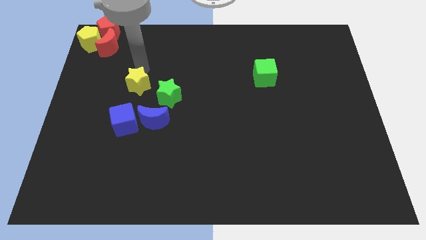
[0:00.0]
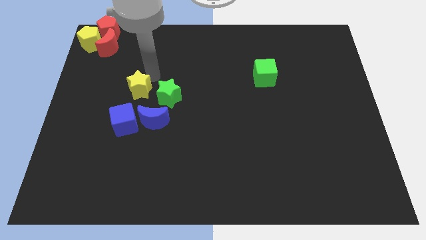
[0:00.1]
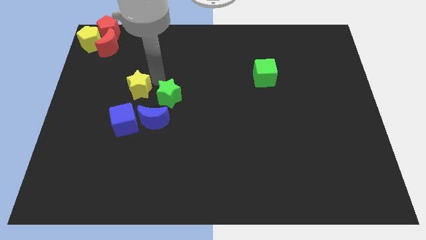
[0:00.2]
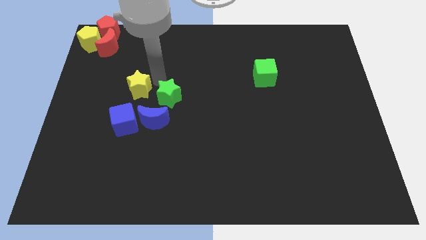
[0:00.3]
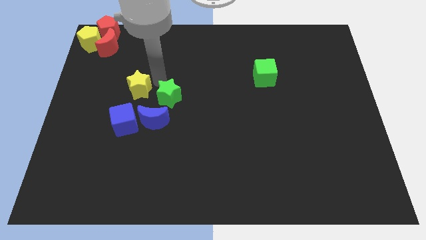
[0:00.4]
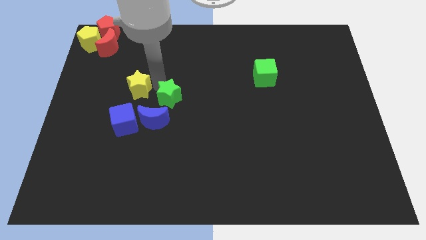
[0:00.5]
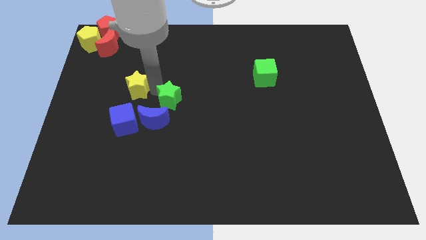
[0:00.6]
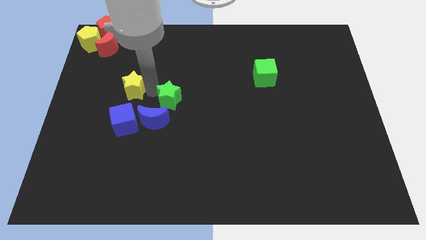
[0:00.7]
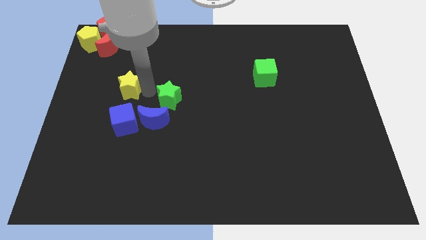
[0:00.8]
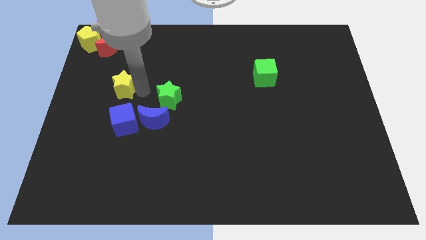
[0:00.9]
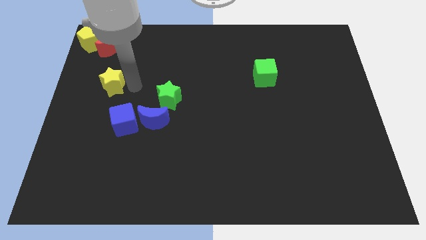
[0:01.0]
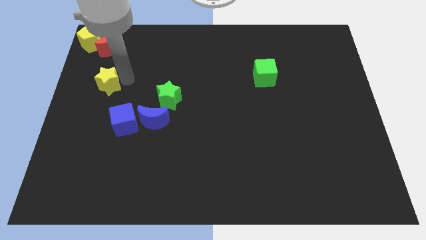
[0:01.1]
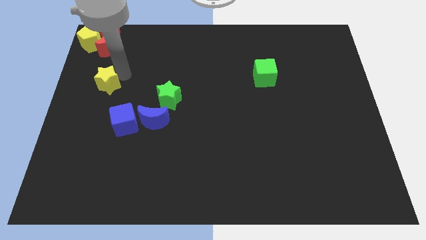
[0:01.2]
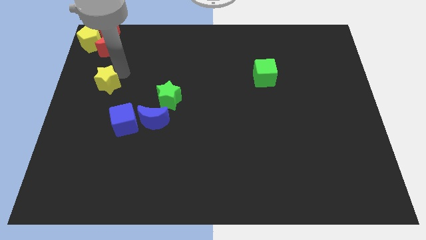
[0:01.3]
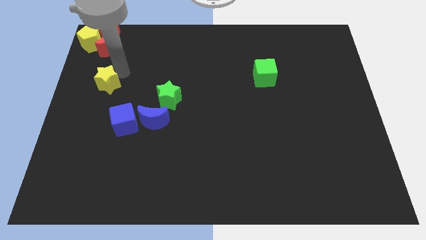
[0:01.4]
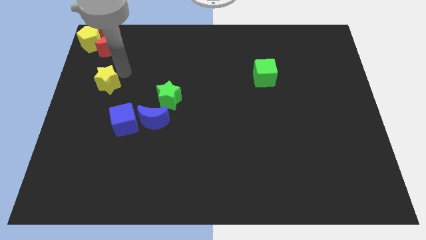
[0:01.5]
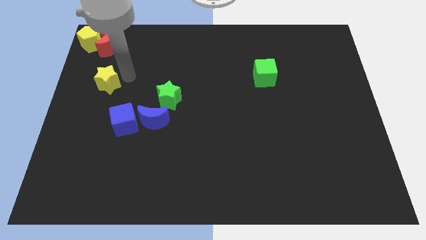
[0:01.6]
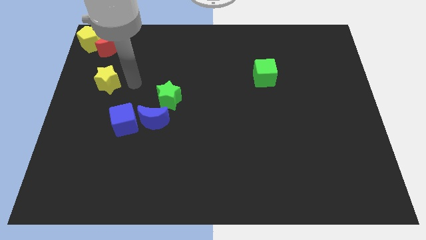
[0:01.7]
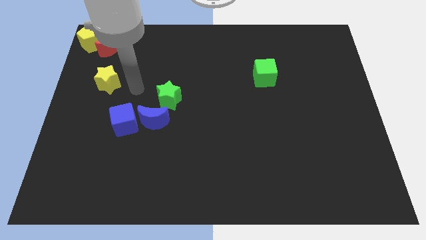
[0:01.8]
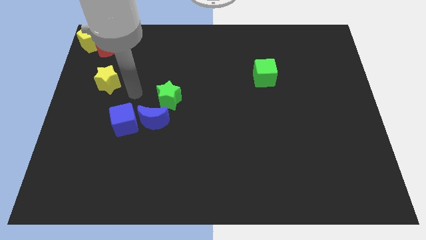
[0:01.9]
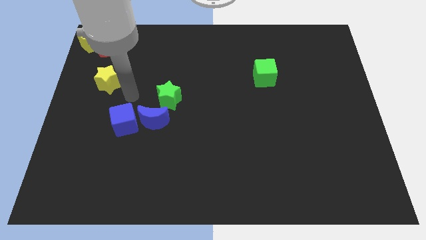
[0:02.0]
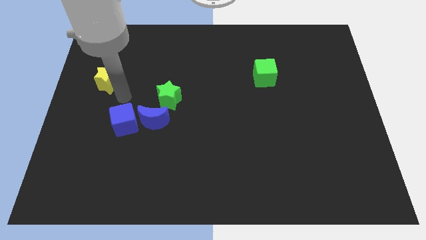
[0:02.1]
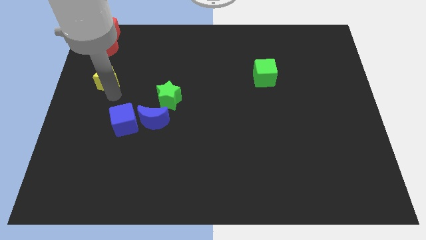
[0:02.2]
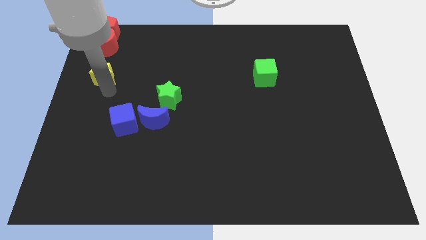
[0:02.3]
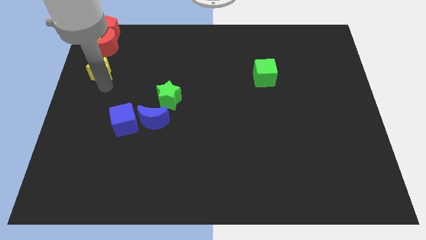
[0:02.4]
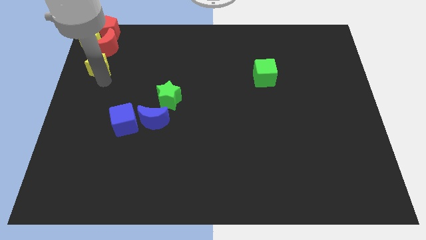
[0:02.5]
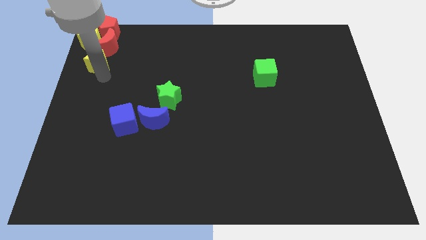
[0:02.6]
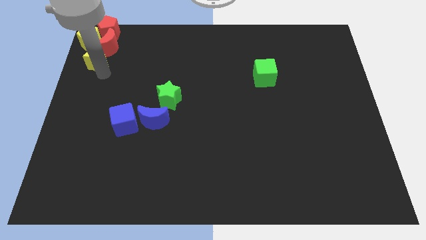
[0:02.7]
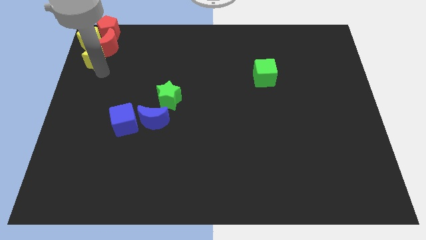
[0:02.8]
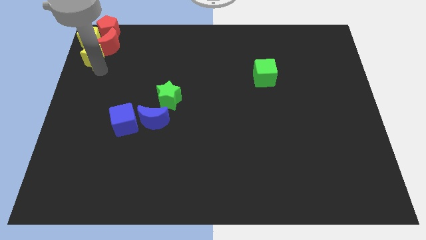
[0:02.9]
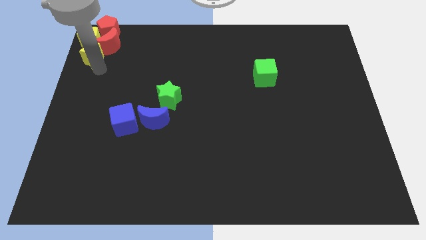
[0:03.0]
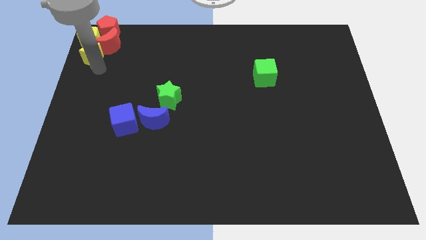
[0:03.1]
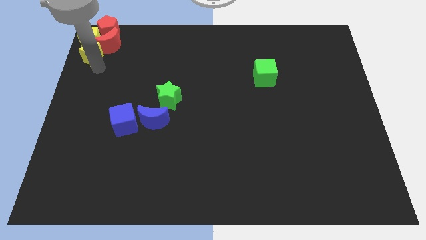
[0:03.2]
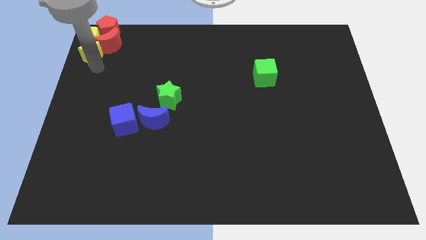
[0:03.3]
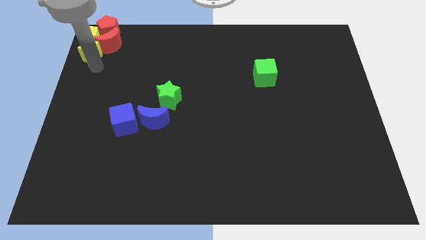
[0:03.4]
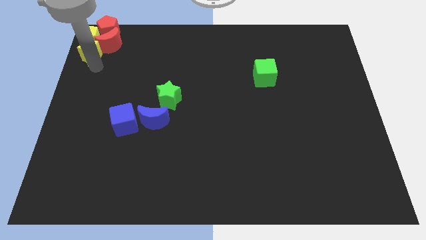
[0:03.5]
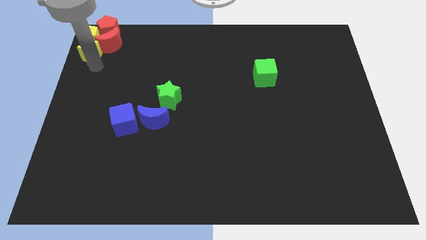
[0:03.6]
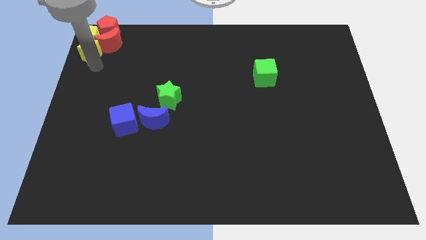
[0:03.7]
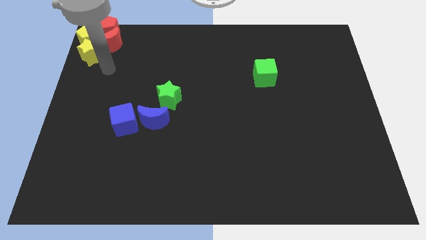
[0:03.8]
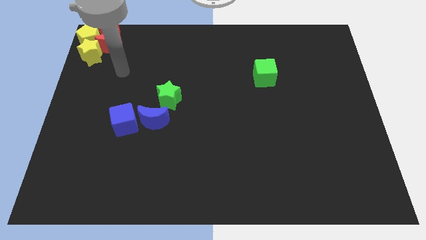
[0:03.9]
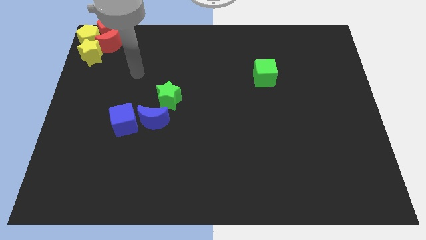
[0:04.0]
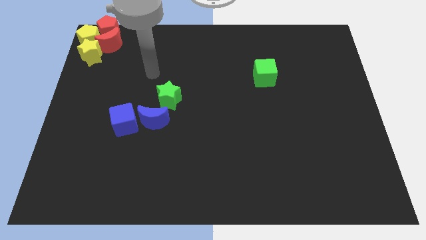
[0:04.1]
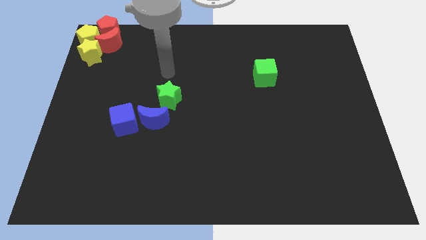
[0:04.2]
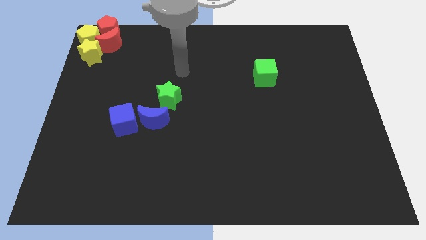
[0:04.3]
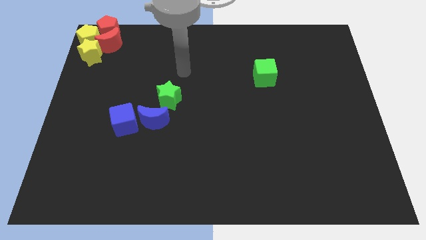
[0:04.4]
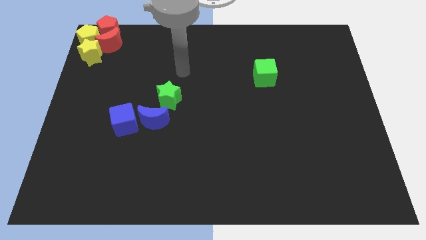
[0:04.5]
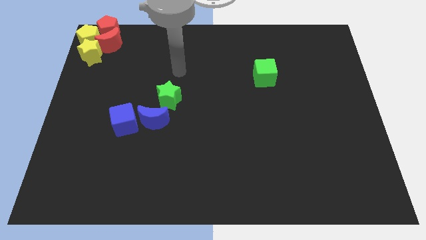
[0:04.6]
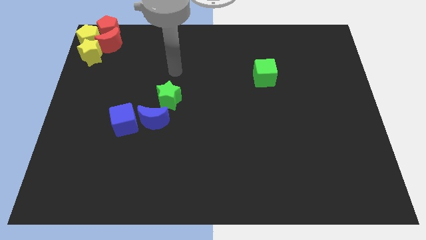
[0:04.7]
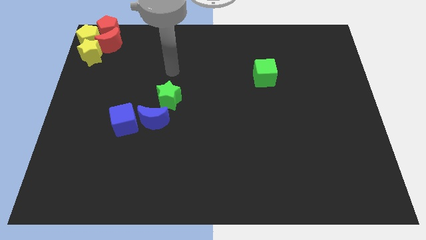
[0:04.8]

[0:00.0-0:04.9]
place yellow star to the bottom of the yellow pentagon

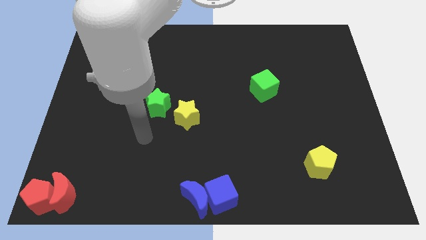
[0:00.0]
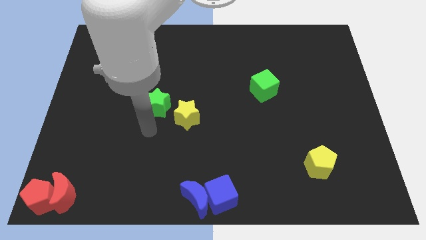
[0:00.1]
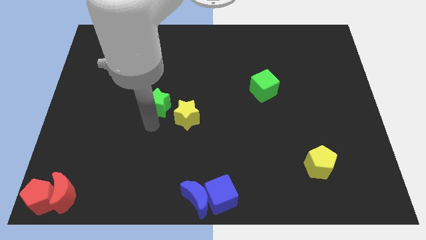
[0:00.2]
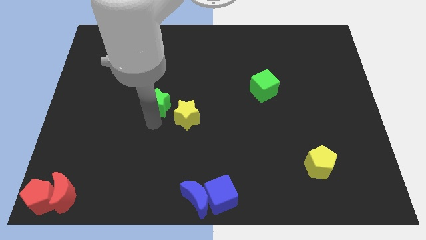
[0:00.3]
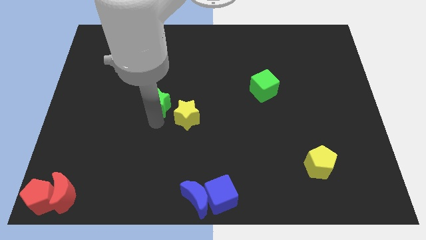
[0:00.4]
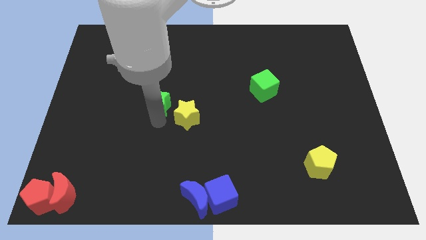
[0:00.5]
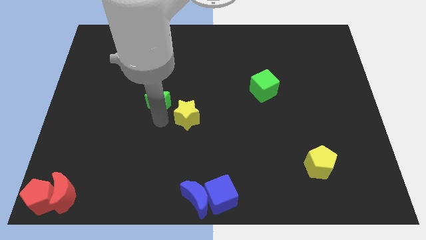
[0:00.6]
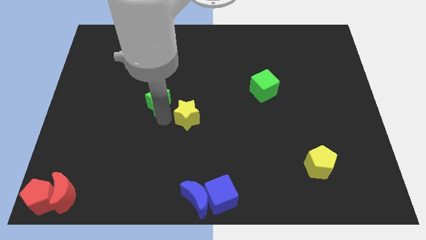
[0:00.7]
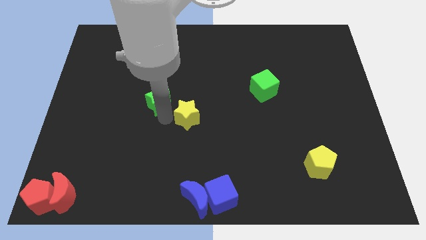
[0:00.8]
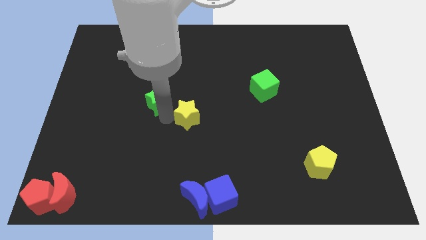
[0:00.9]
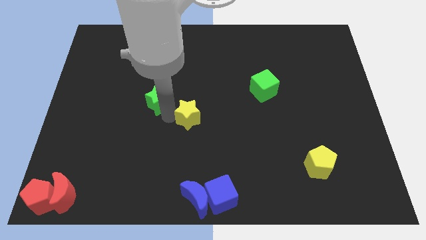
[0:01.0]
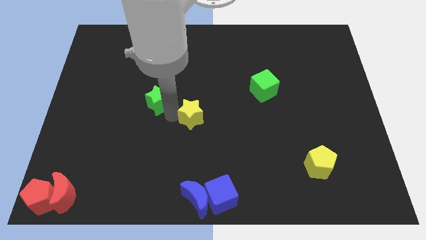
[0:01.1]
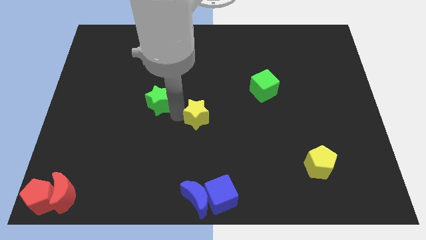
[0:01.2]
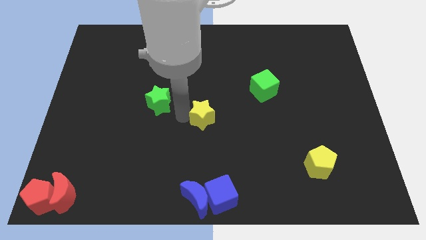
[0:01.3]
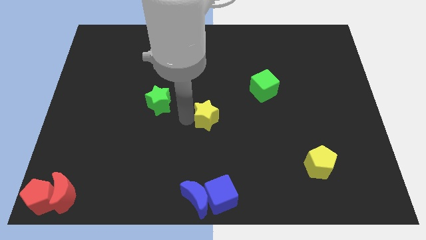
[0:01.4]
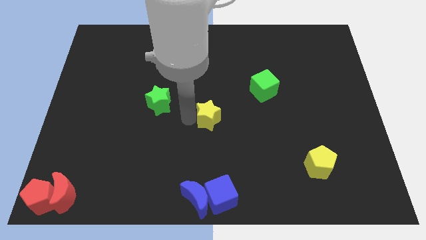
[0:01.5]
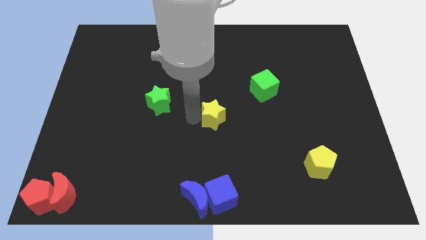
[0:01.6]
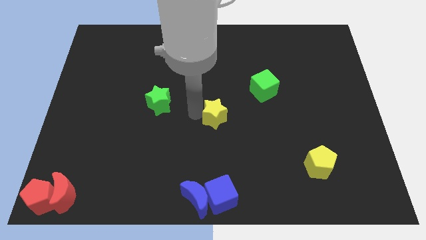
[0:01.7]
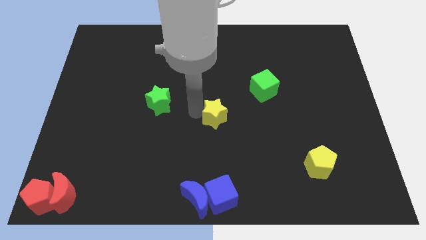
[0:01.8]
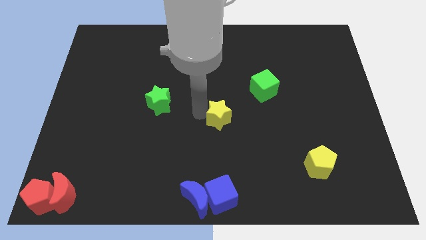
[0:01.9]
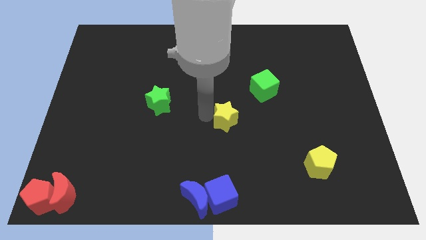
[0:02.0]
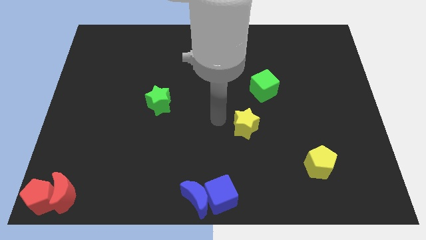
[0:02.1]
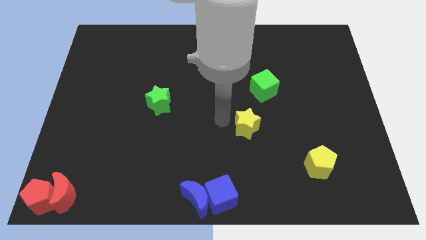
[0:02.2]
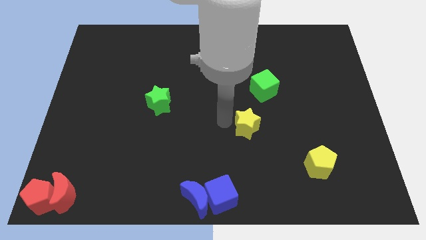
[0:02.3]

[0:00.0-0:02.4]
away the yellow star from green star towards the right of the board

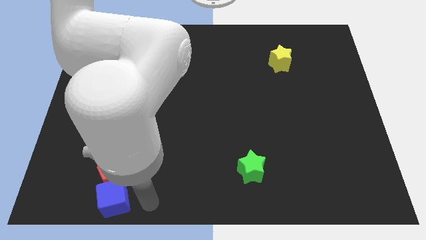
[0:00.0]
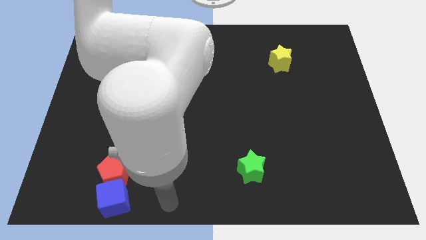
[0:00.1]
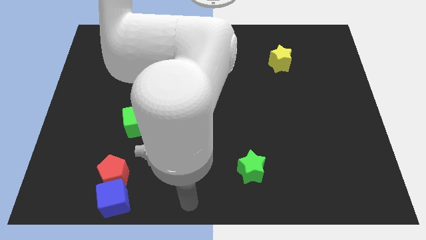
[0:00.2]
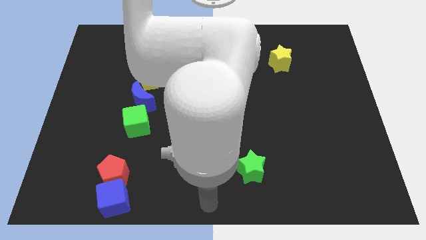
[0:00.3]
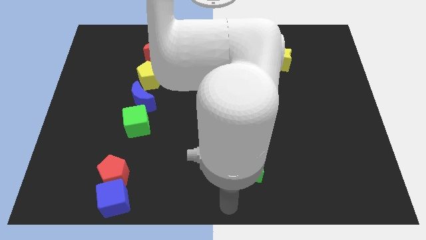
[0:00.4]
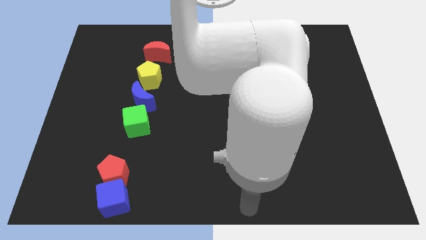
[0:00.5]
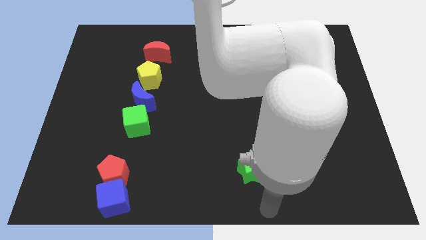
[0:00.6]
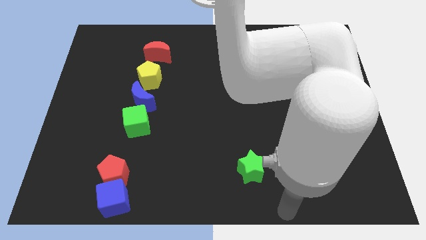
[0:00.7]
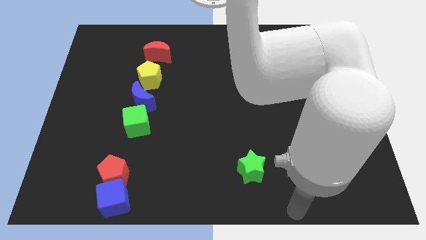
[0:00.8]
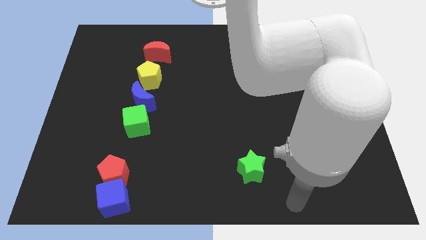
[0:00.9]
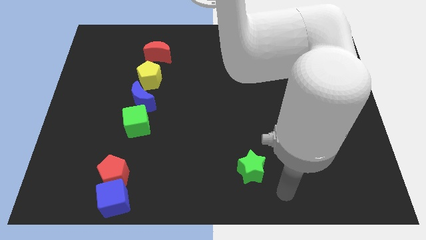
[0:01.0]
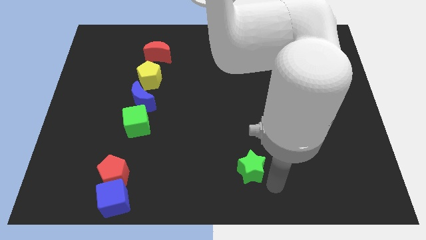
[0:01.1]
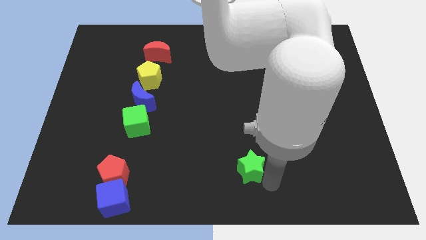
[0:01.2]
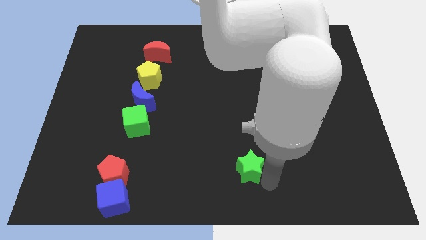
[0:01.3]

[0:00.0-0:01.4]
move the green star slightly to the left

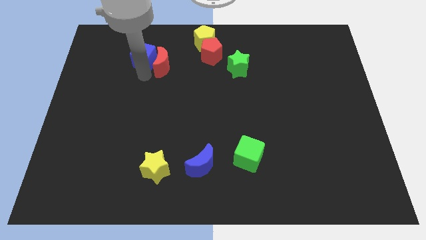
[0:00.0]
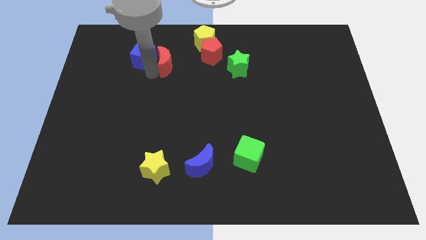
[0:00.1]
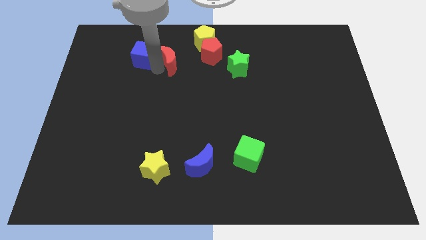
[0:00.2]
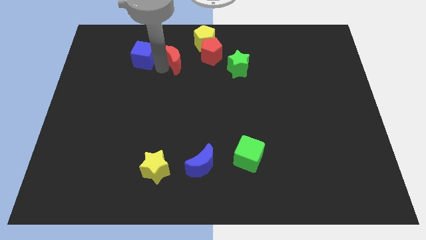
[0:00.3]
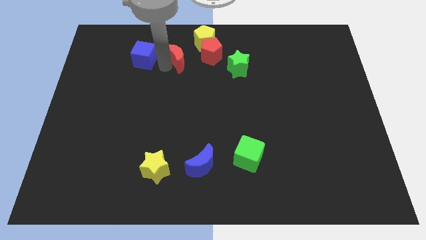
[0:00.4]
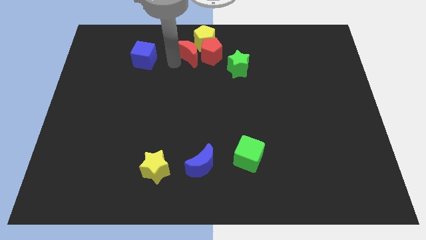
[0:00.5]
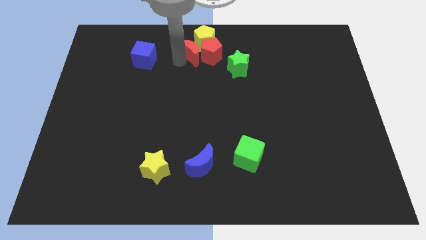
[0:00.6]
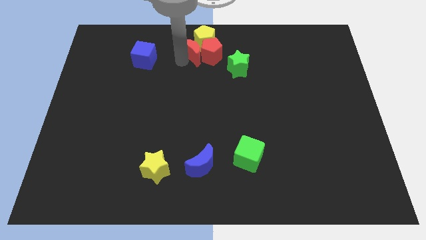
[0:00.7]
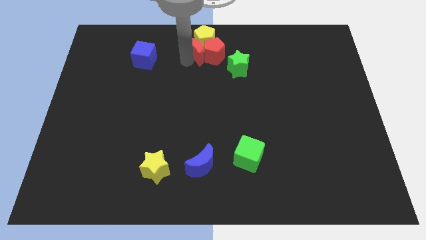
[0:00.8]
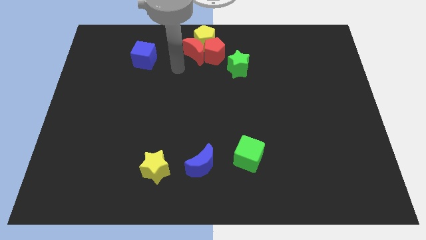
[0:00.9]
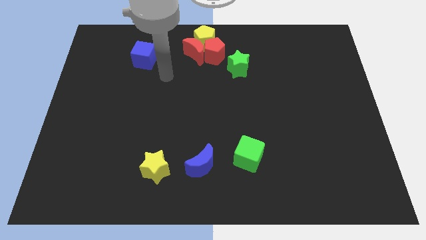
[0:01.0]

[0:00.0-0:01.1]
separate the red crescent from the blue cube
